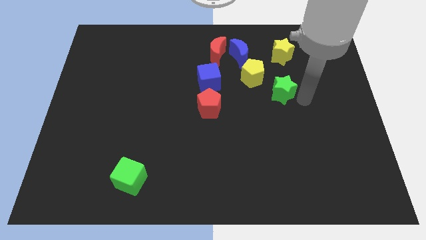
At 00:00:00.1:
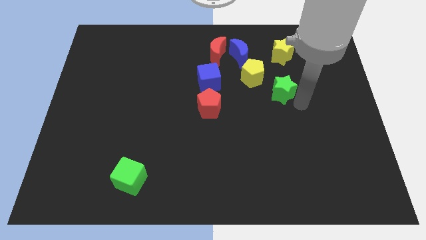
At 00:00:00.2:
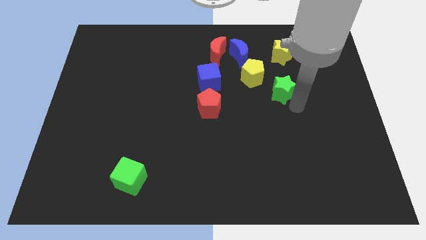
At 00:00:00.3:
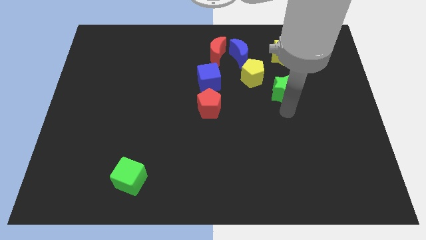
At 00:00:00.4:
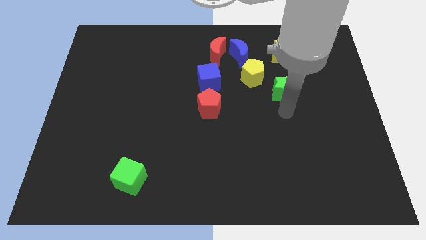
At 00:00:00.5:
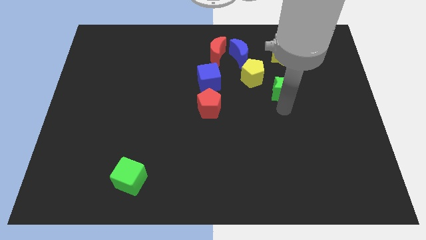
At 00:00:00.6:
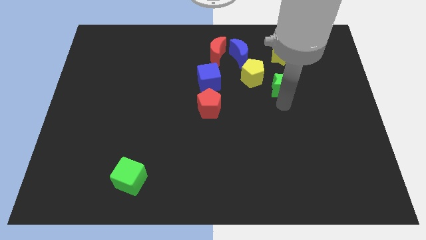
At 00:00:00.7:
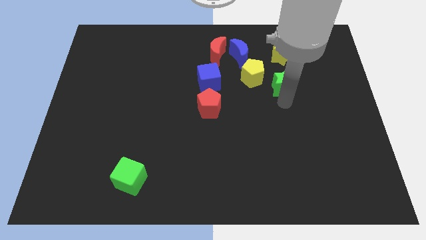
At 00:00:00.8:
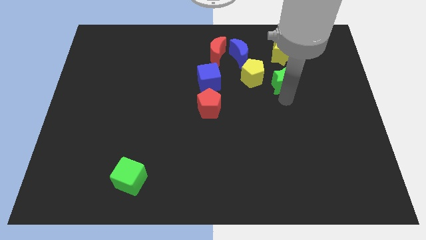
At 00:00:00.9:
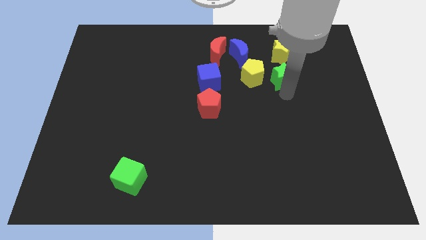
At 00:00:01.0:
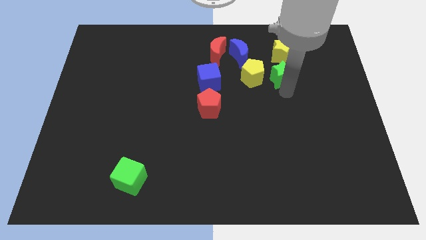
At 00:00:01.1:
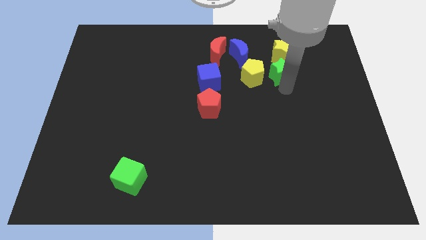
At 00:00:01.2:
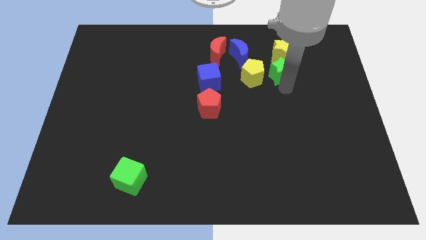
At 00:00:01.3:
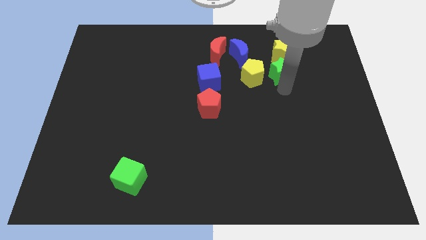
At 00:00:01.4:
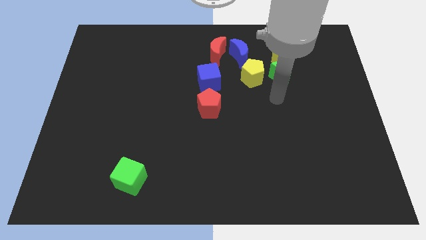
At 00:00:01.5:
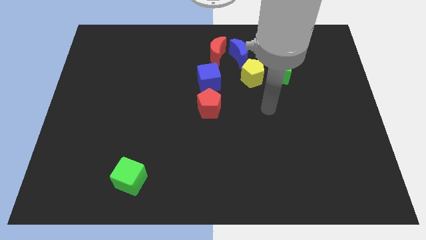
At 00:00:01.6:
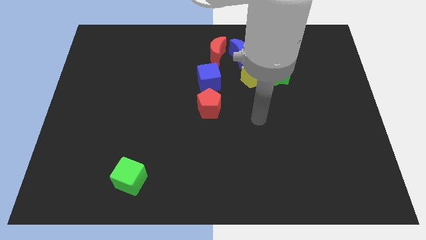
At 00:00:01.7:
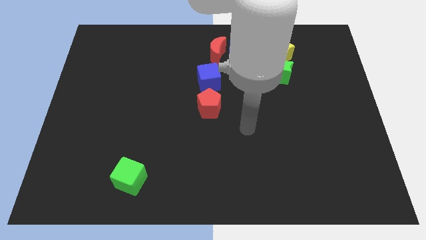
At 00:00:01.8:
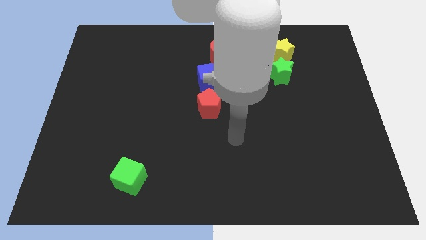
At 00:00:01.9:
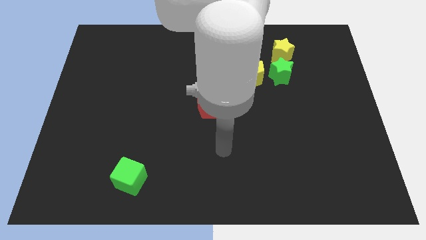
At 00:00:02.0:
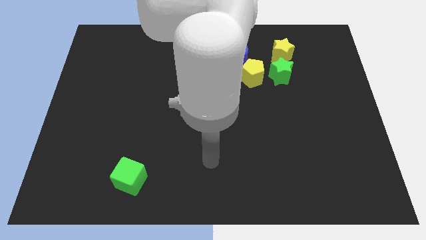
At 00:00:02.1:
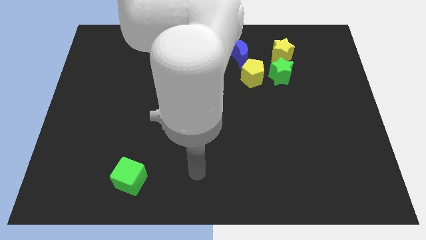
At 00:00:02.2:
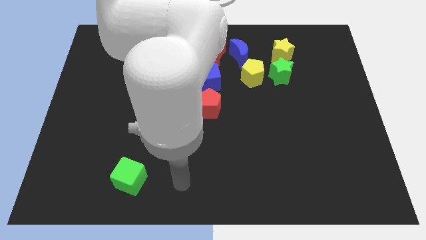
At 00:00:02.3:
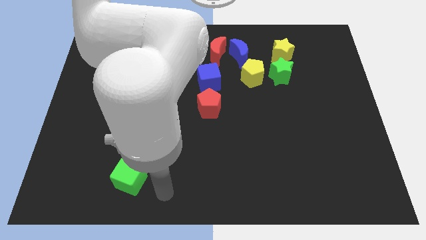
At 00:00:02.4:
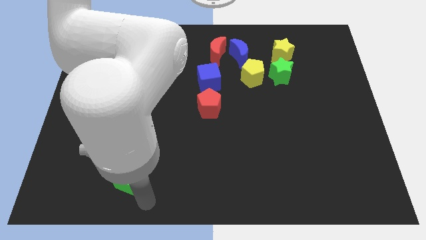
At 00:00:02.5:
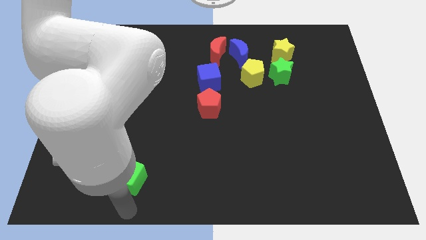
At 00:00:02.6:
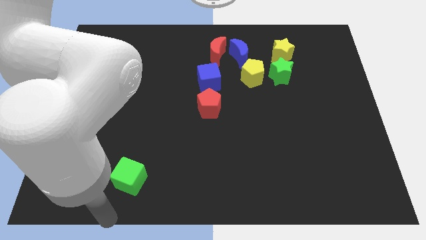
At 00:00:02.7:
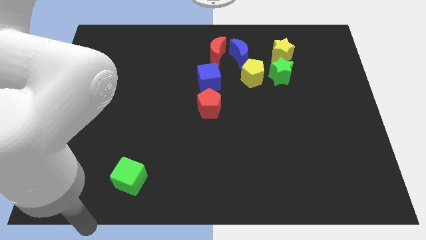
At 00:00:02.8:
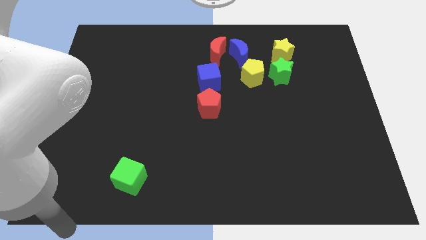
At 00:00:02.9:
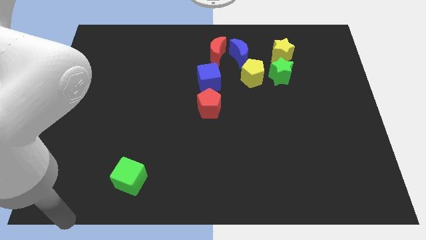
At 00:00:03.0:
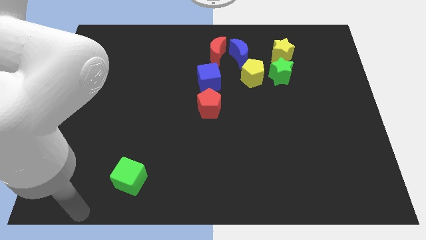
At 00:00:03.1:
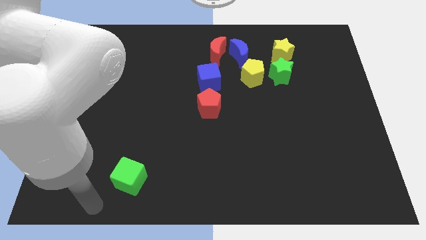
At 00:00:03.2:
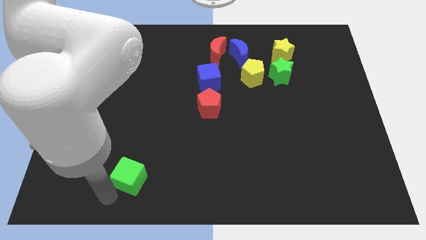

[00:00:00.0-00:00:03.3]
place the green star to the right of the yellow pentagon

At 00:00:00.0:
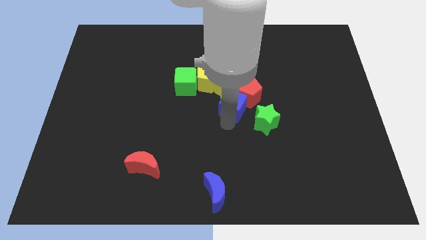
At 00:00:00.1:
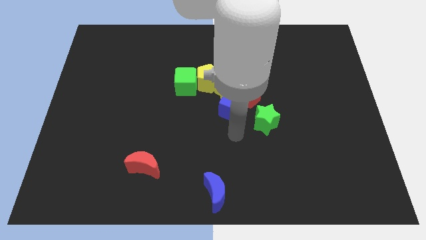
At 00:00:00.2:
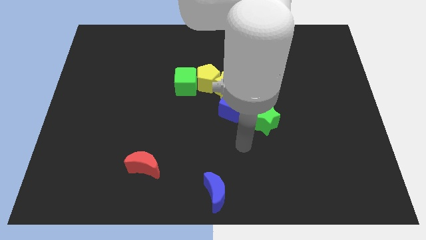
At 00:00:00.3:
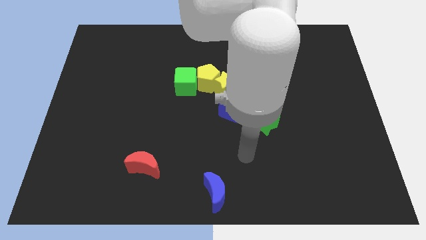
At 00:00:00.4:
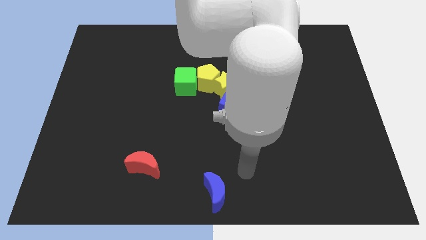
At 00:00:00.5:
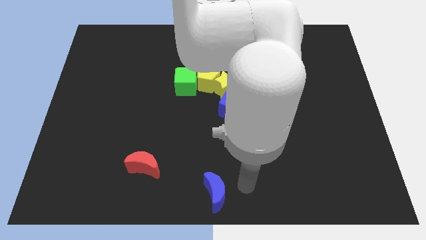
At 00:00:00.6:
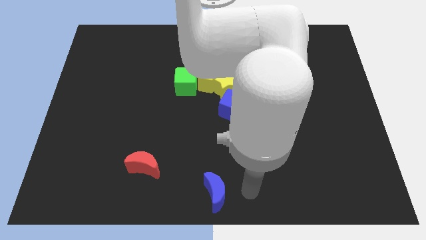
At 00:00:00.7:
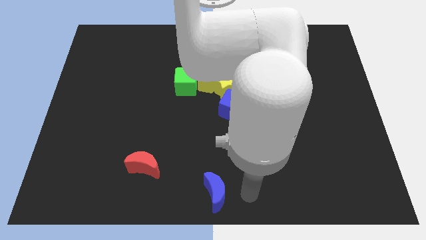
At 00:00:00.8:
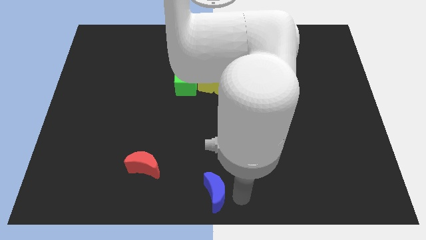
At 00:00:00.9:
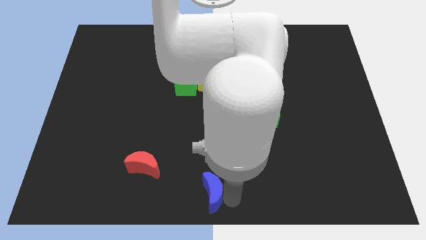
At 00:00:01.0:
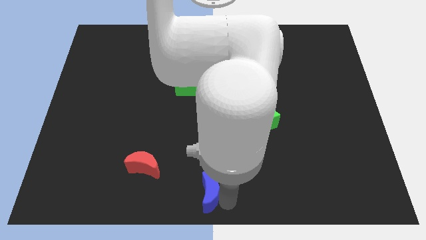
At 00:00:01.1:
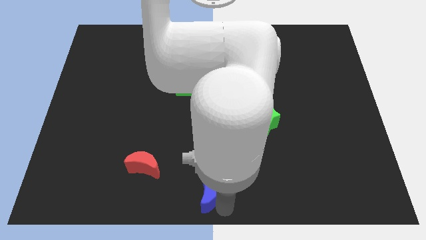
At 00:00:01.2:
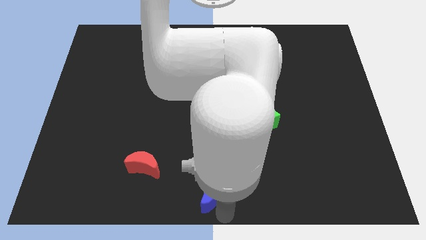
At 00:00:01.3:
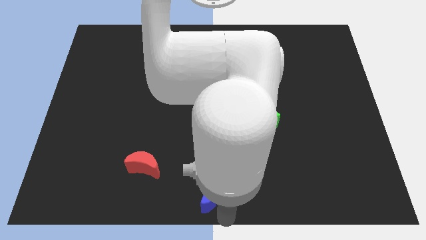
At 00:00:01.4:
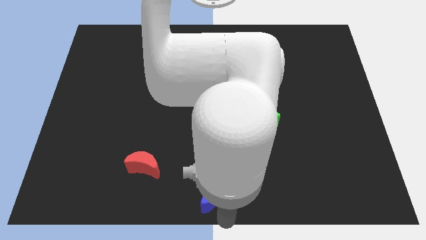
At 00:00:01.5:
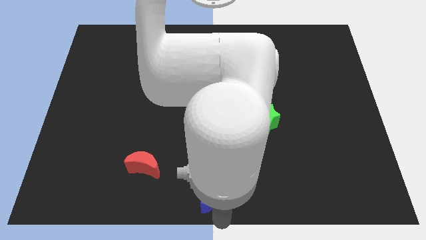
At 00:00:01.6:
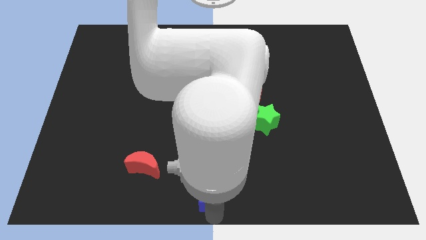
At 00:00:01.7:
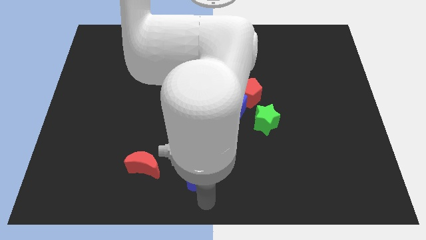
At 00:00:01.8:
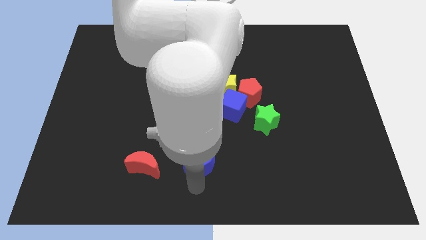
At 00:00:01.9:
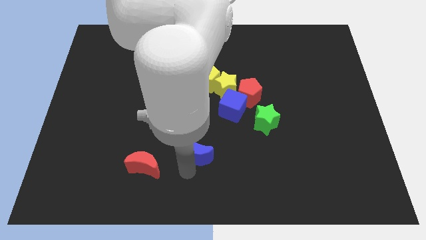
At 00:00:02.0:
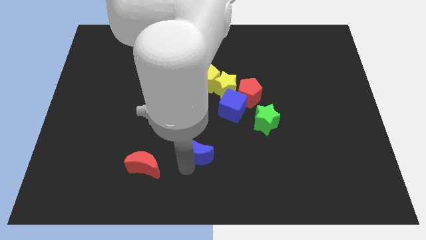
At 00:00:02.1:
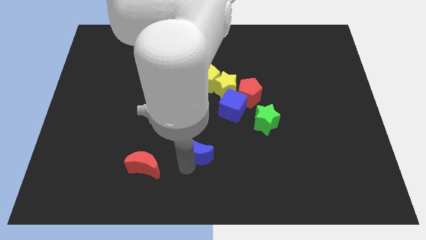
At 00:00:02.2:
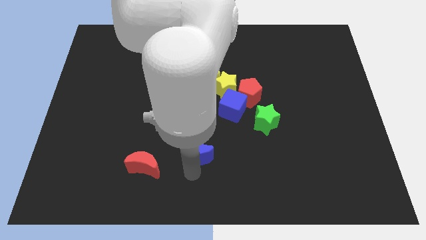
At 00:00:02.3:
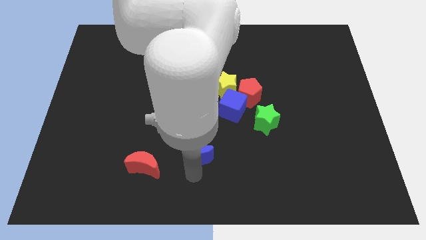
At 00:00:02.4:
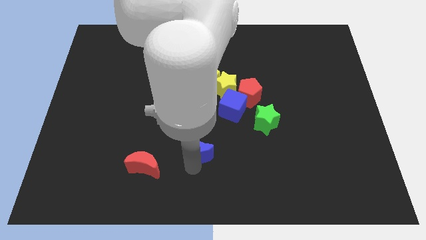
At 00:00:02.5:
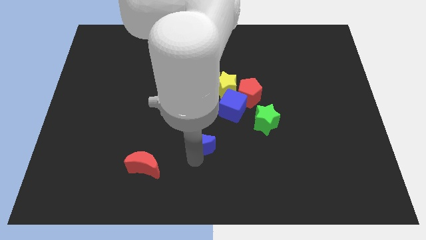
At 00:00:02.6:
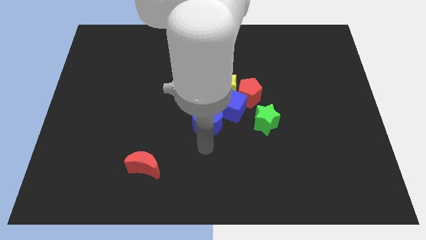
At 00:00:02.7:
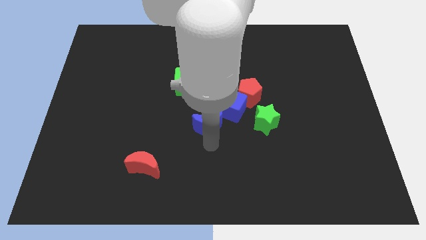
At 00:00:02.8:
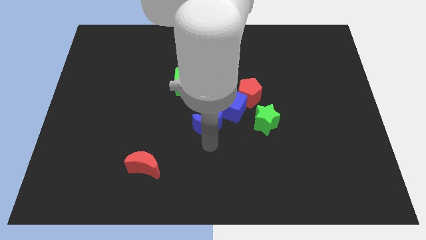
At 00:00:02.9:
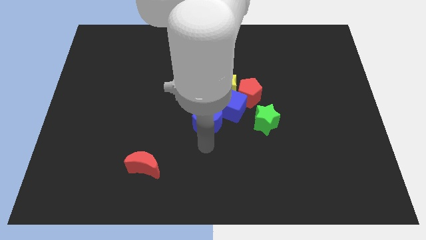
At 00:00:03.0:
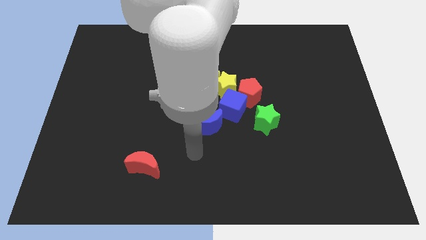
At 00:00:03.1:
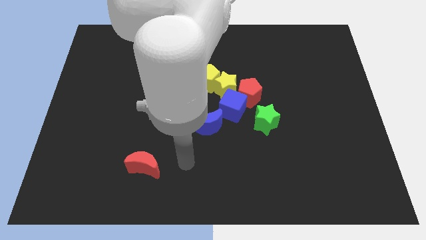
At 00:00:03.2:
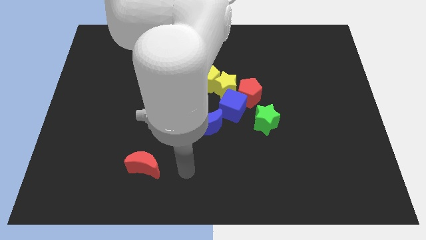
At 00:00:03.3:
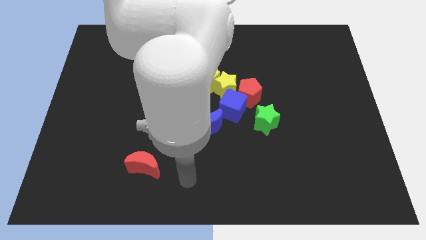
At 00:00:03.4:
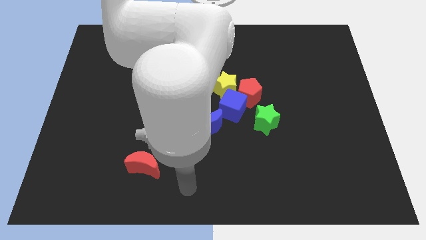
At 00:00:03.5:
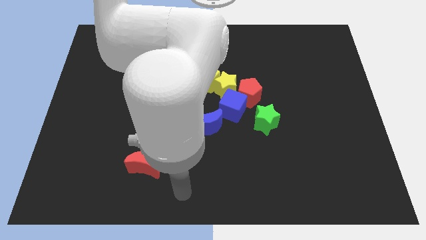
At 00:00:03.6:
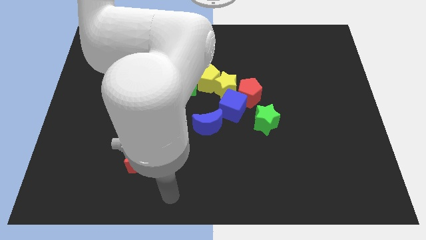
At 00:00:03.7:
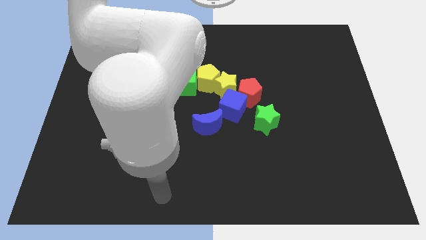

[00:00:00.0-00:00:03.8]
push the blue crescent towards the blue cube

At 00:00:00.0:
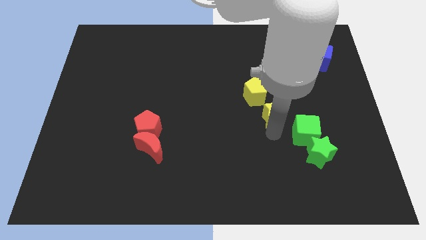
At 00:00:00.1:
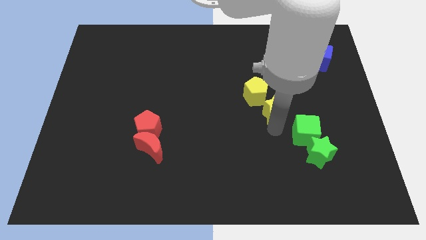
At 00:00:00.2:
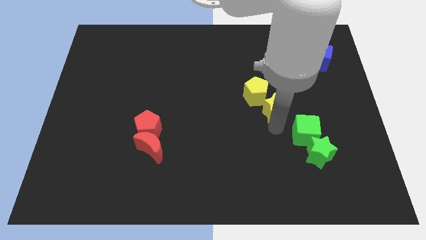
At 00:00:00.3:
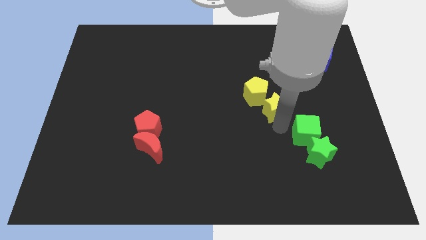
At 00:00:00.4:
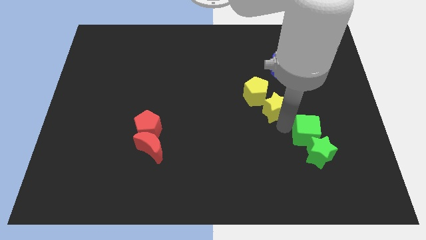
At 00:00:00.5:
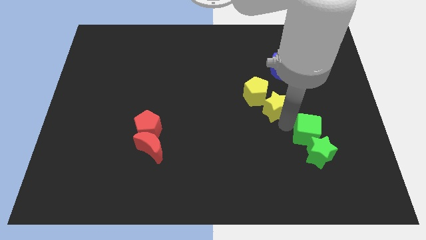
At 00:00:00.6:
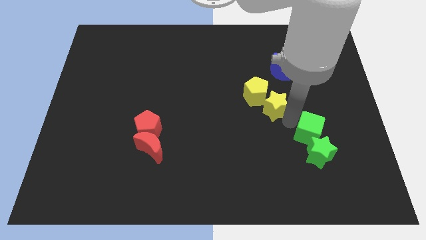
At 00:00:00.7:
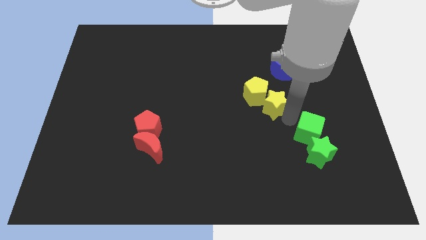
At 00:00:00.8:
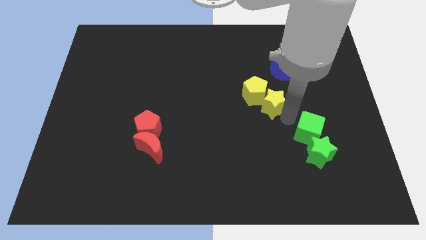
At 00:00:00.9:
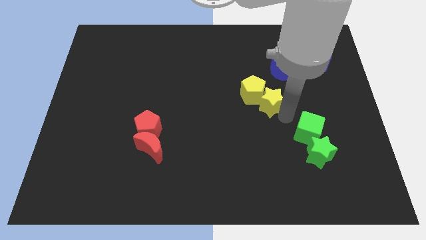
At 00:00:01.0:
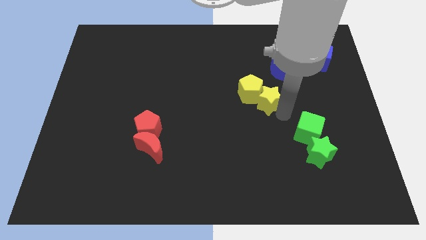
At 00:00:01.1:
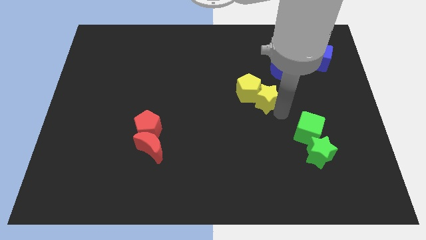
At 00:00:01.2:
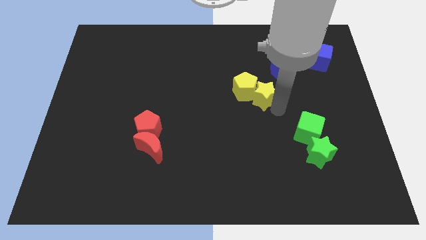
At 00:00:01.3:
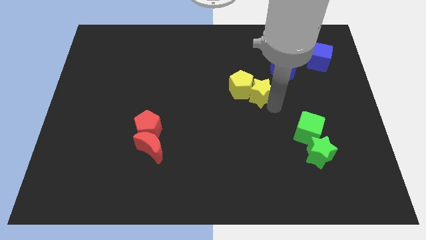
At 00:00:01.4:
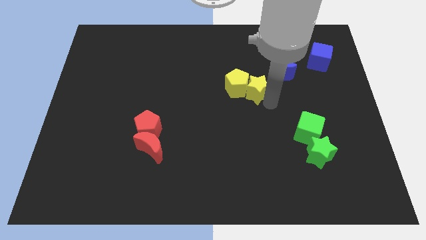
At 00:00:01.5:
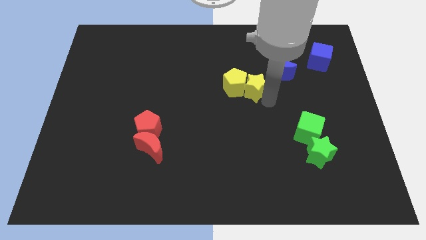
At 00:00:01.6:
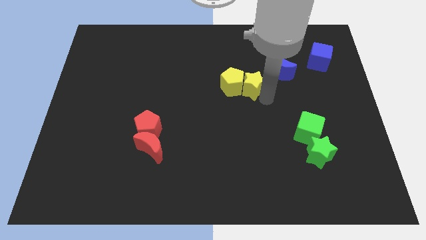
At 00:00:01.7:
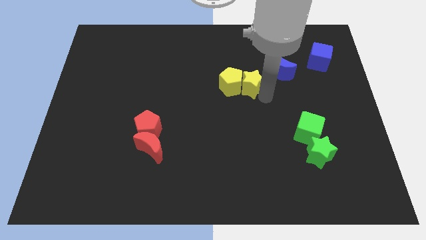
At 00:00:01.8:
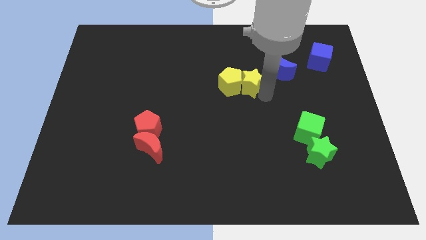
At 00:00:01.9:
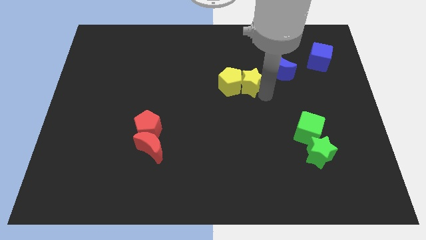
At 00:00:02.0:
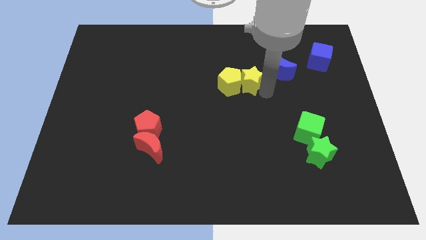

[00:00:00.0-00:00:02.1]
push the yellow star to the right of yellow pentagon
